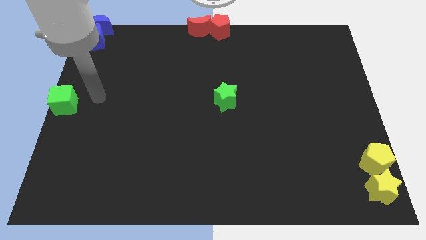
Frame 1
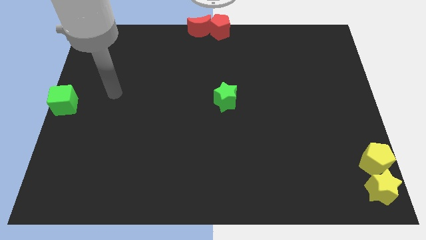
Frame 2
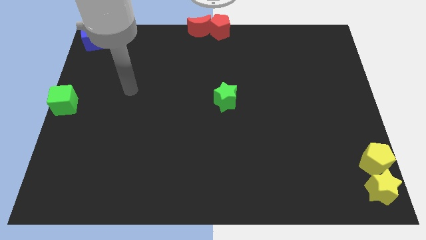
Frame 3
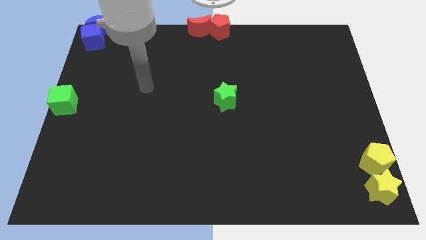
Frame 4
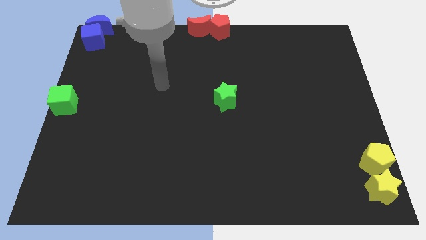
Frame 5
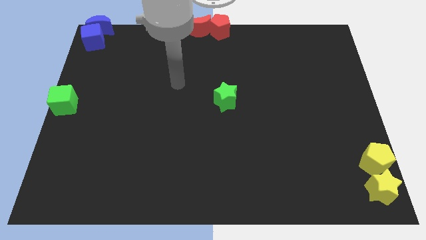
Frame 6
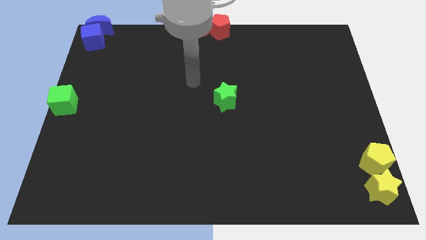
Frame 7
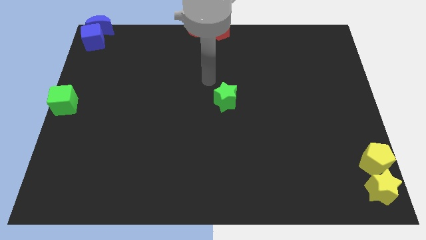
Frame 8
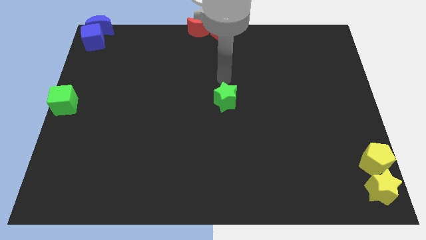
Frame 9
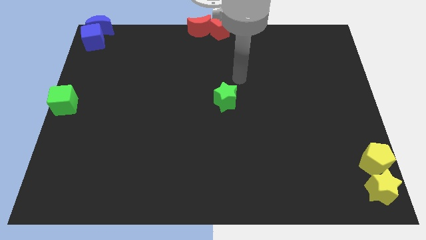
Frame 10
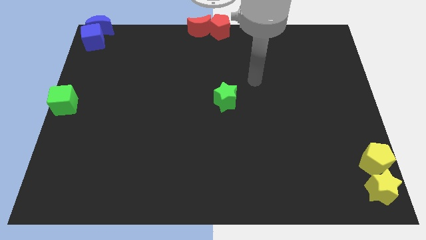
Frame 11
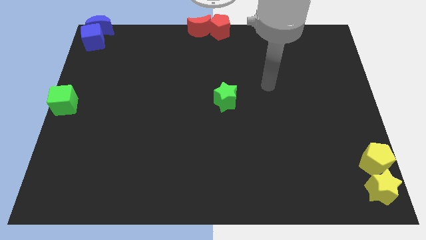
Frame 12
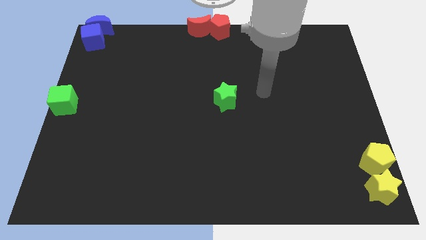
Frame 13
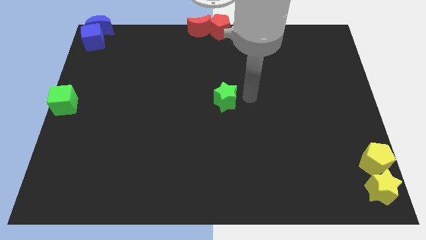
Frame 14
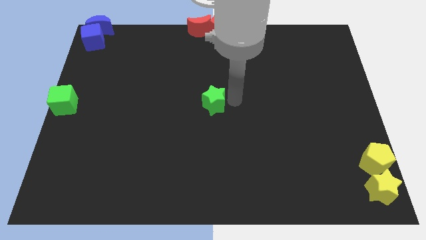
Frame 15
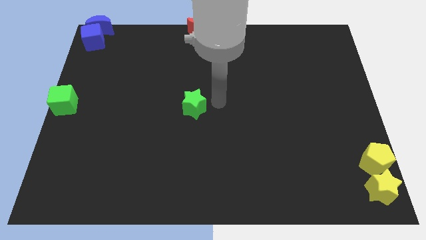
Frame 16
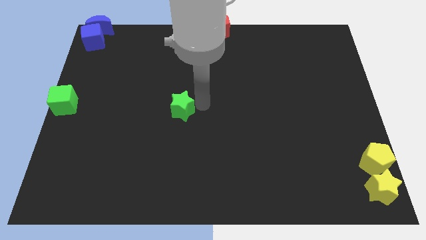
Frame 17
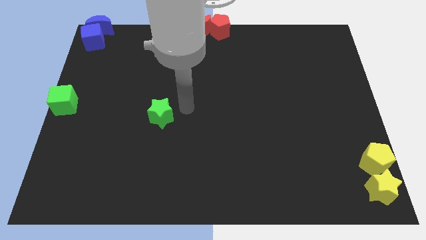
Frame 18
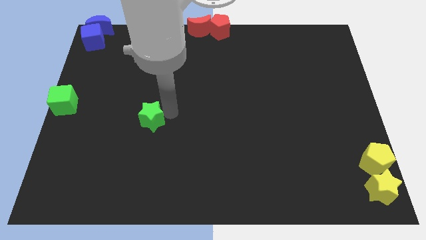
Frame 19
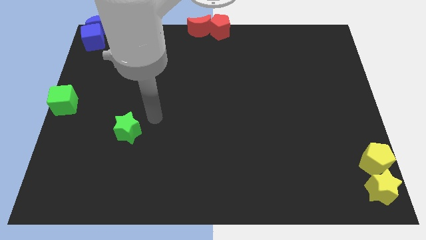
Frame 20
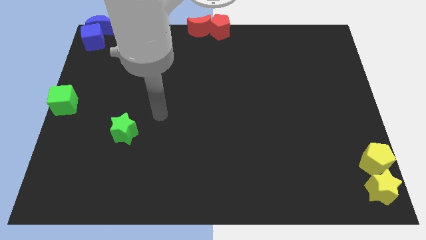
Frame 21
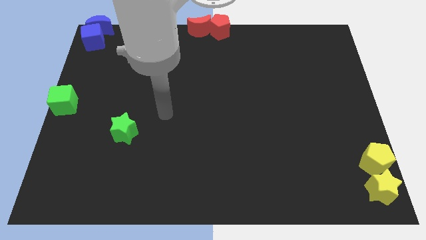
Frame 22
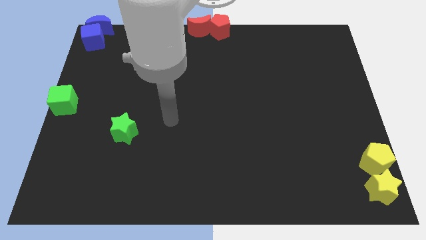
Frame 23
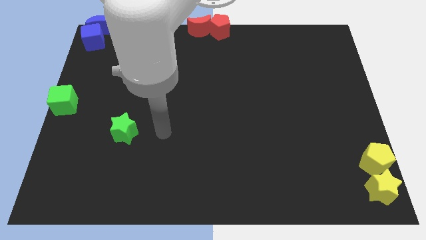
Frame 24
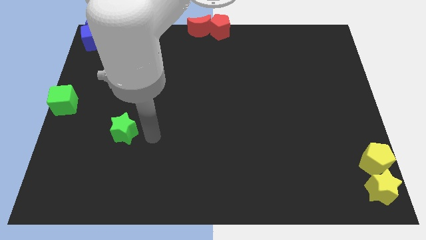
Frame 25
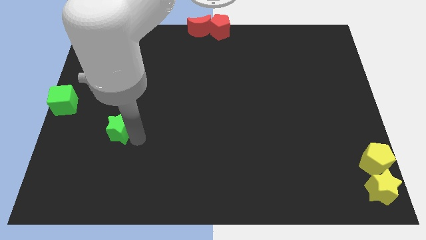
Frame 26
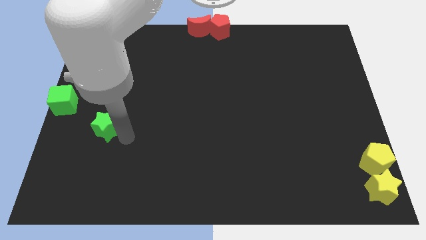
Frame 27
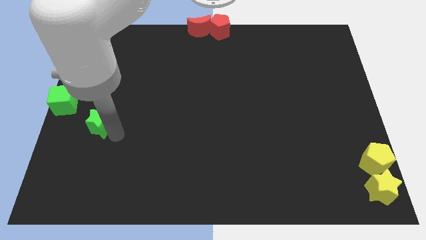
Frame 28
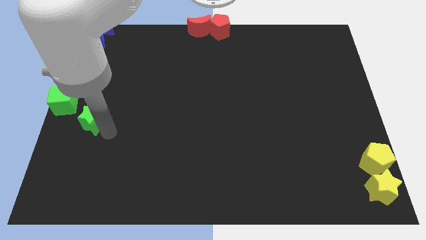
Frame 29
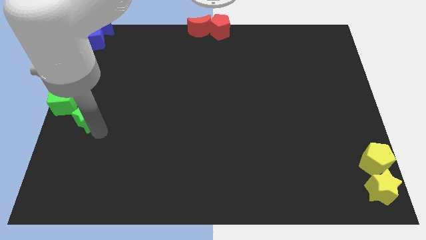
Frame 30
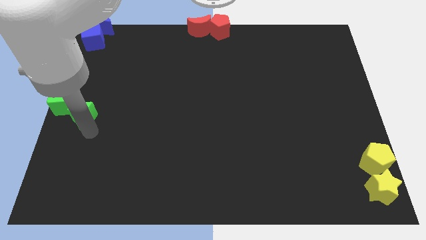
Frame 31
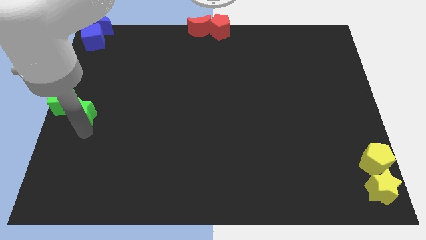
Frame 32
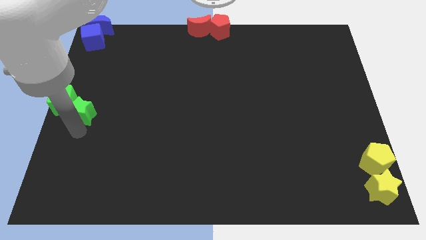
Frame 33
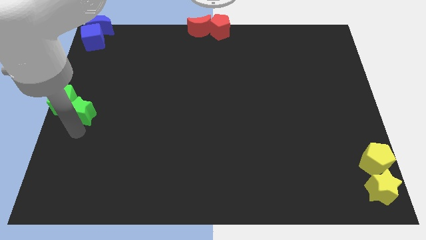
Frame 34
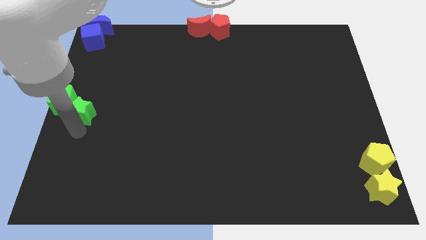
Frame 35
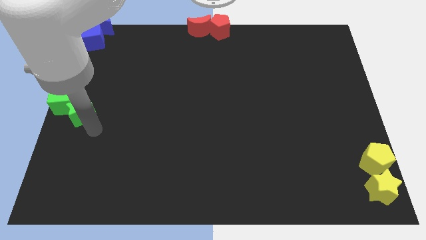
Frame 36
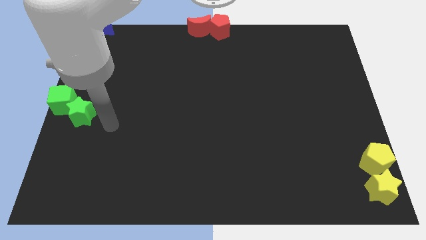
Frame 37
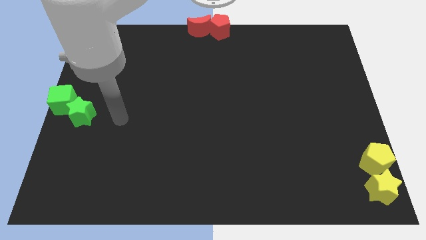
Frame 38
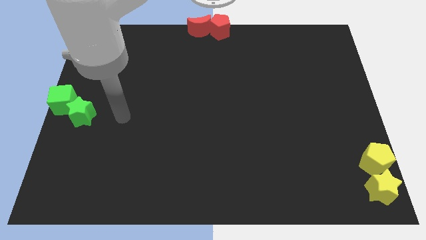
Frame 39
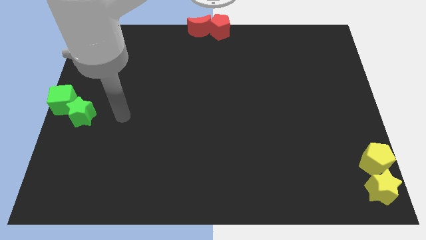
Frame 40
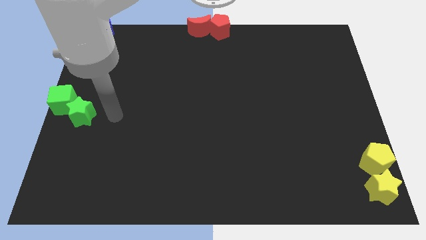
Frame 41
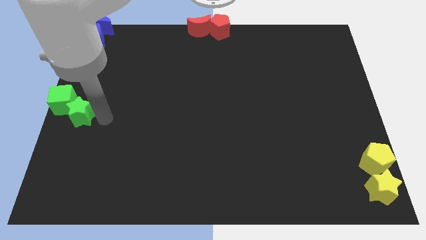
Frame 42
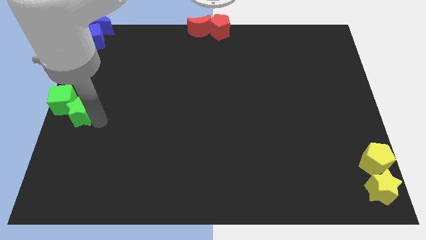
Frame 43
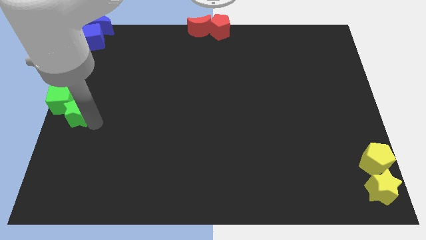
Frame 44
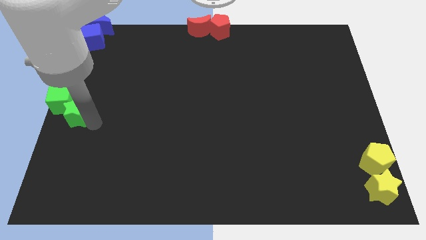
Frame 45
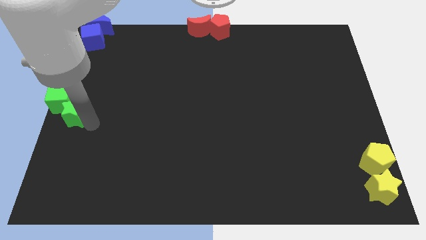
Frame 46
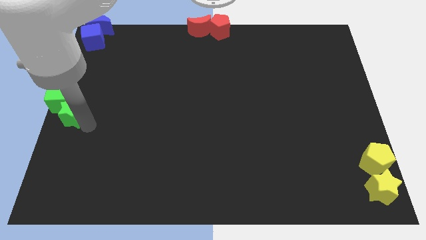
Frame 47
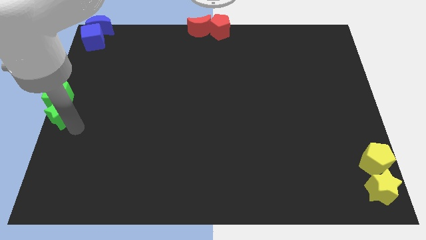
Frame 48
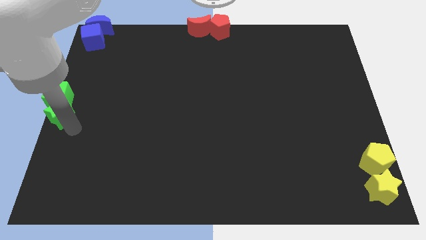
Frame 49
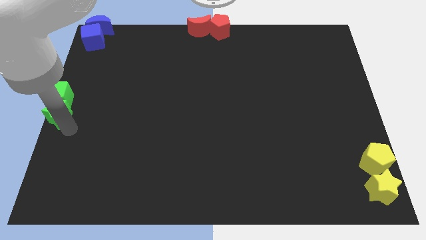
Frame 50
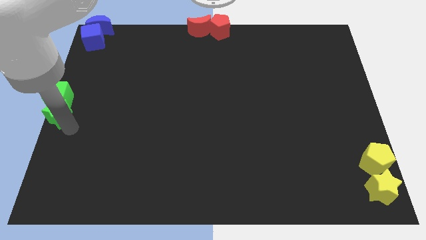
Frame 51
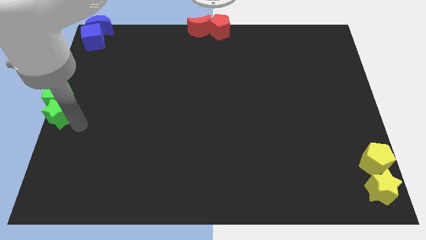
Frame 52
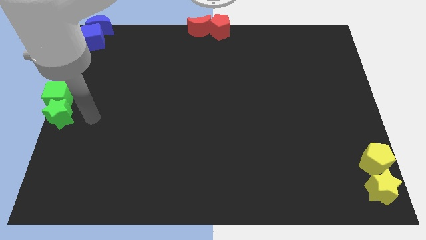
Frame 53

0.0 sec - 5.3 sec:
place the green star towards the green cube

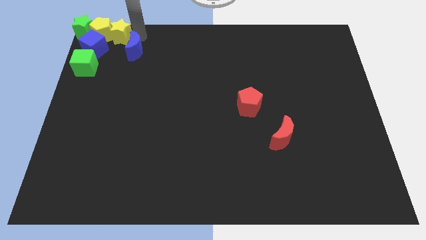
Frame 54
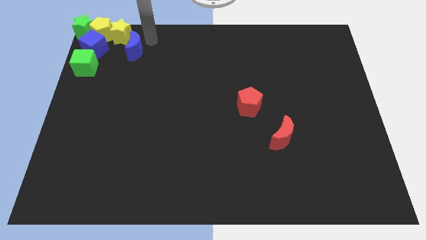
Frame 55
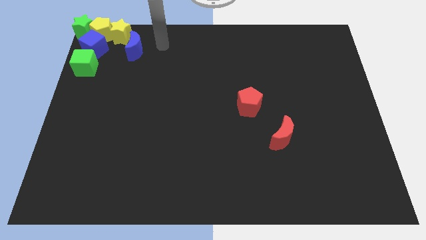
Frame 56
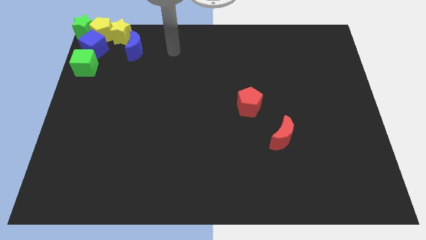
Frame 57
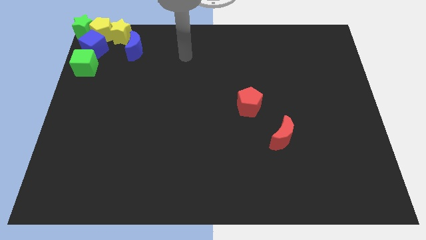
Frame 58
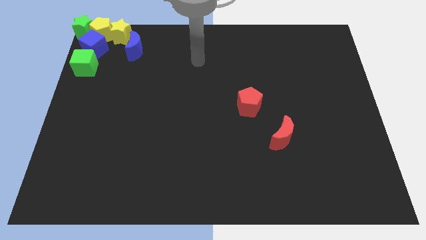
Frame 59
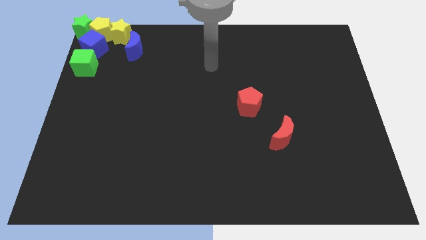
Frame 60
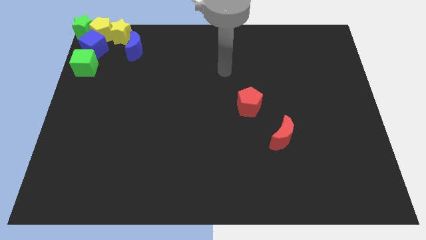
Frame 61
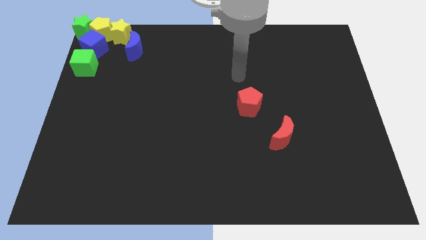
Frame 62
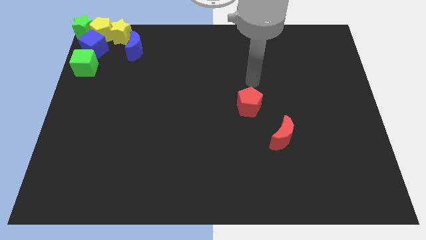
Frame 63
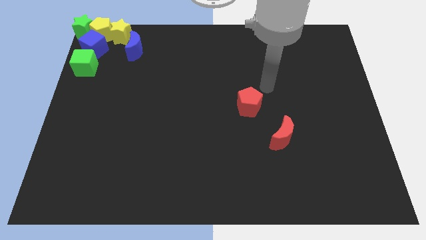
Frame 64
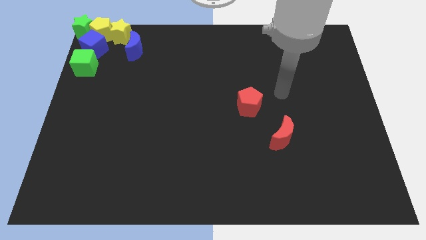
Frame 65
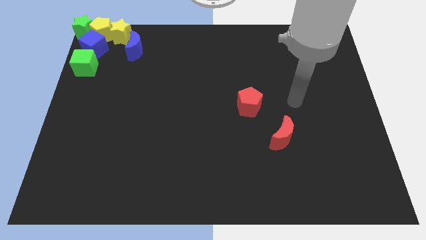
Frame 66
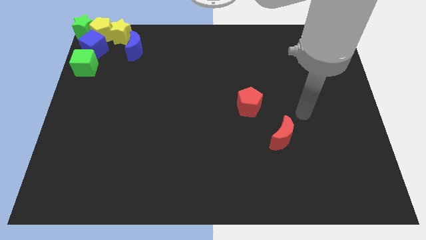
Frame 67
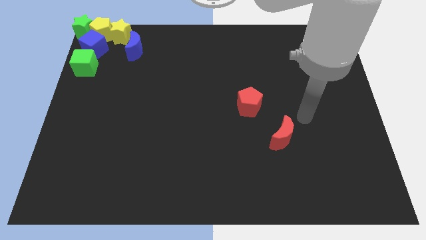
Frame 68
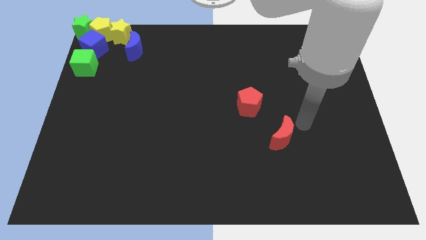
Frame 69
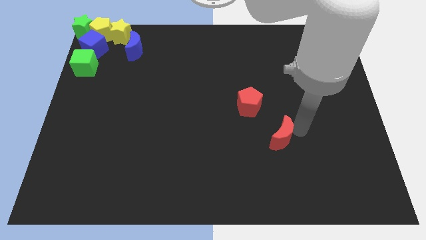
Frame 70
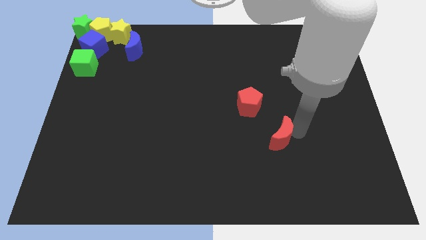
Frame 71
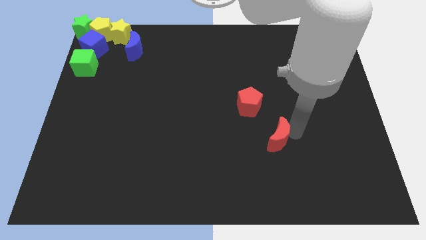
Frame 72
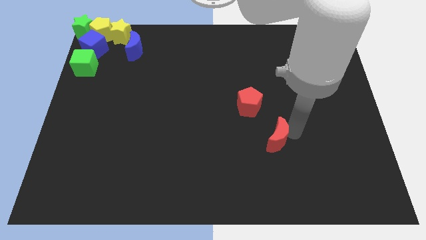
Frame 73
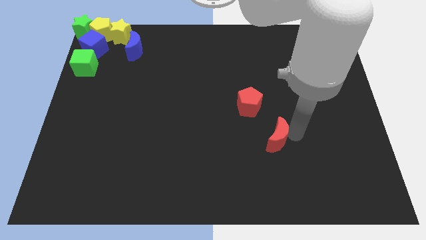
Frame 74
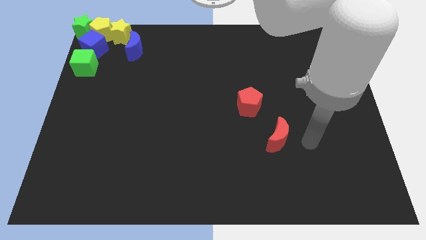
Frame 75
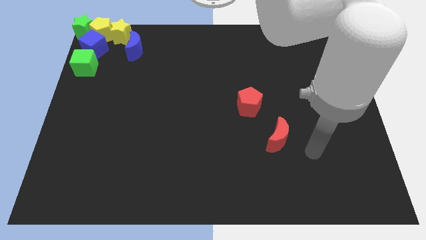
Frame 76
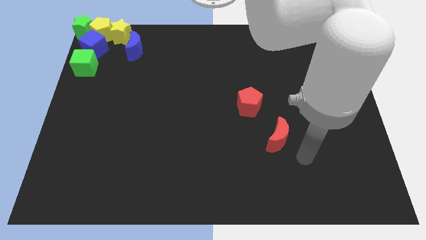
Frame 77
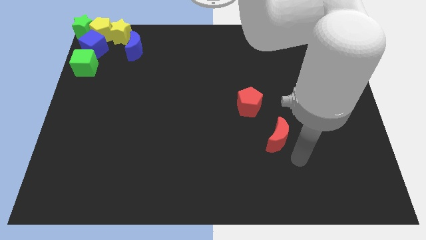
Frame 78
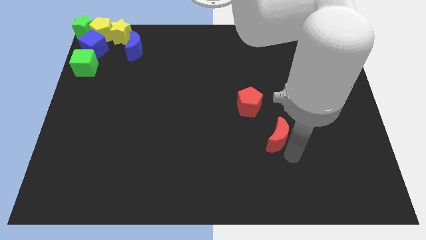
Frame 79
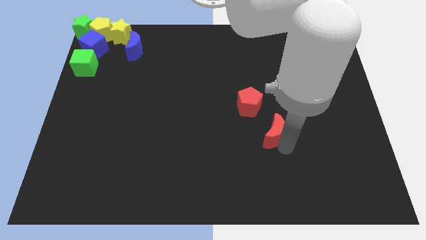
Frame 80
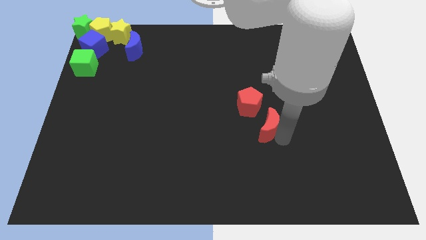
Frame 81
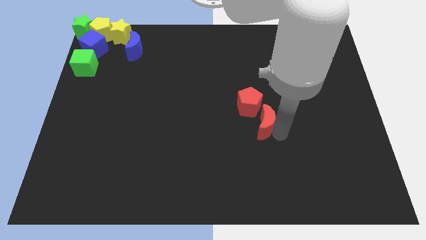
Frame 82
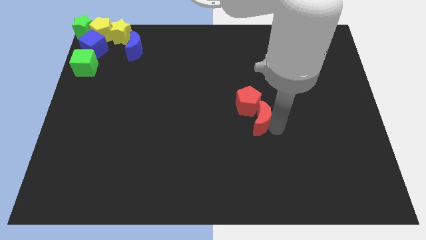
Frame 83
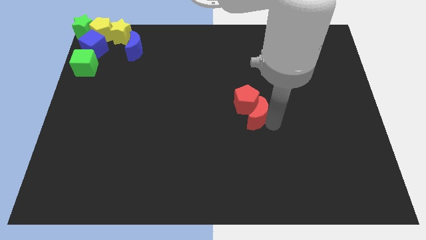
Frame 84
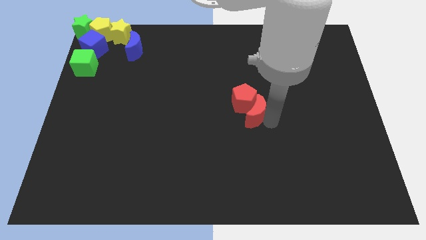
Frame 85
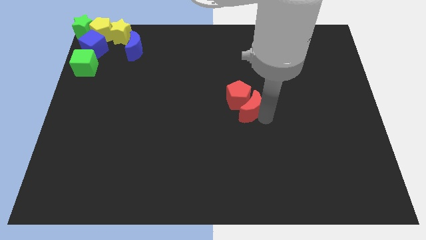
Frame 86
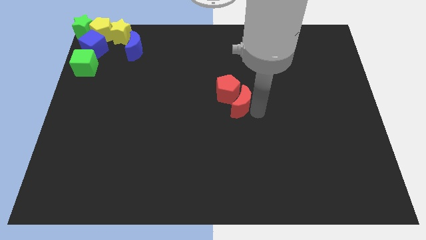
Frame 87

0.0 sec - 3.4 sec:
place the red blocks in the middle of the board

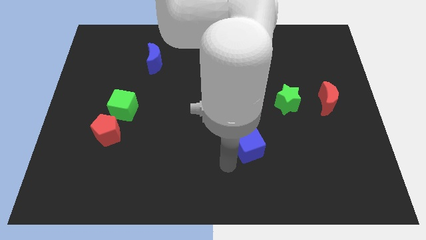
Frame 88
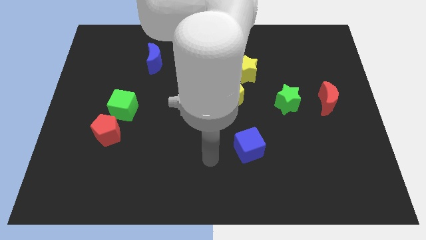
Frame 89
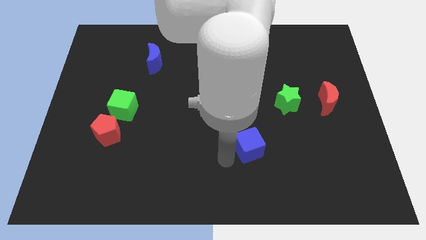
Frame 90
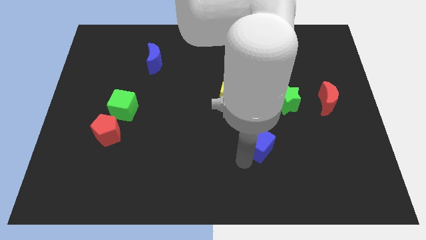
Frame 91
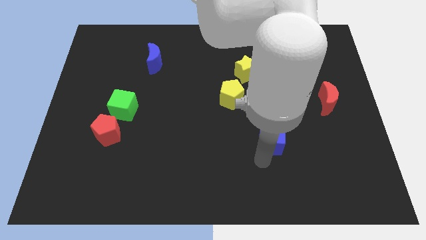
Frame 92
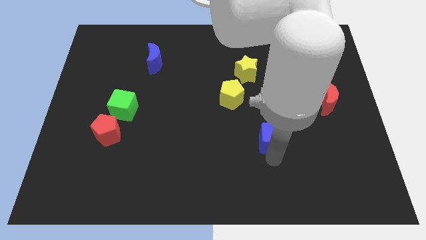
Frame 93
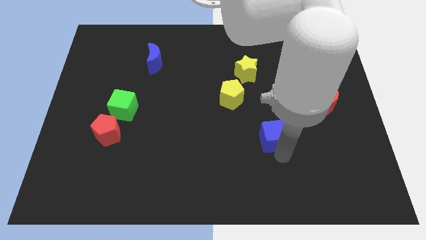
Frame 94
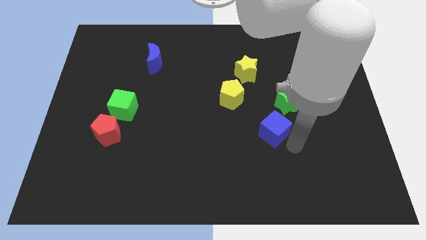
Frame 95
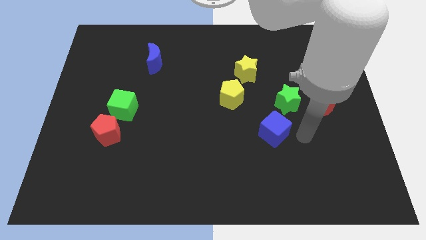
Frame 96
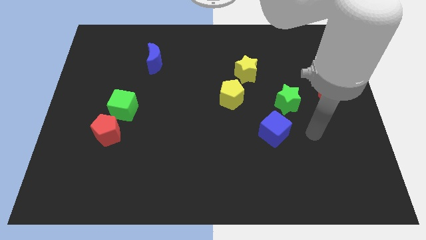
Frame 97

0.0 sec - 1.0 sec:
place blue cube diagonally towards the yellow pentagon
